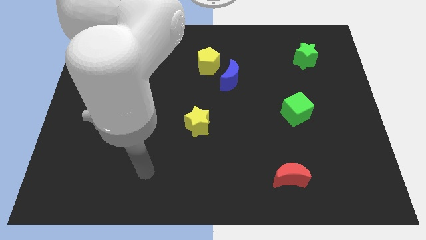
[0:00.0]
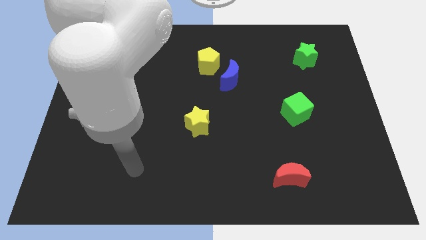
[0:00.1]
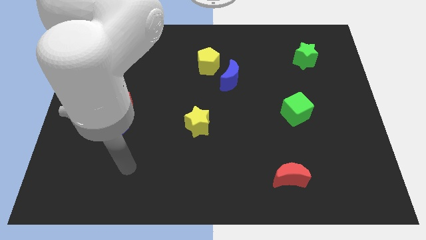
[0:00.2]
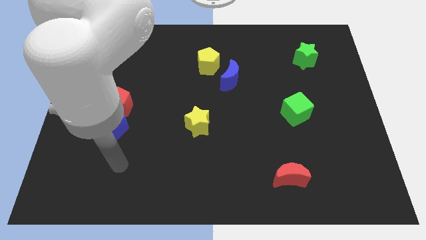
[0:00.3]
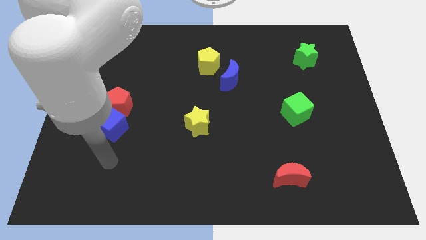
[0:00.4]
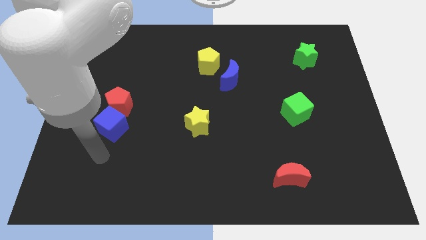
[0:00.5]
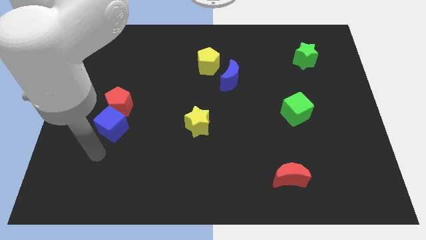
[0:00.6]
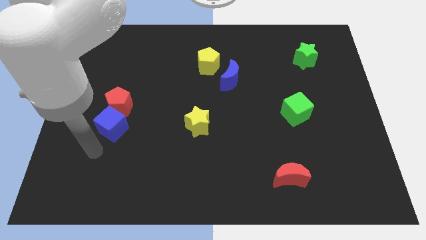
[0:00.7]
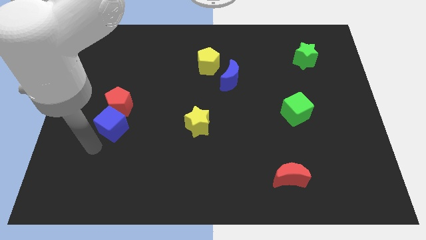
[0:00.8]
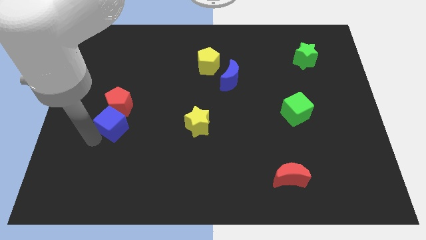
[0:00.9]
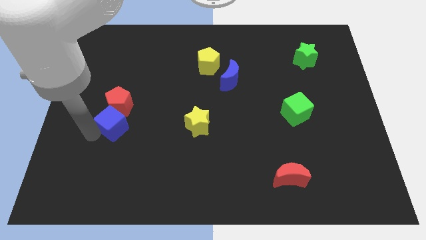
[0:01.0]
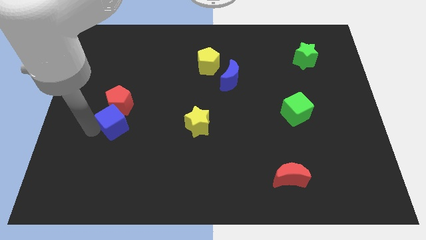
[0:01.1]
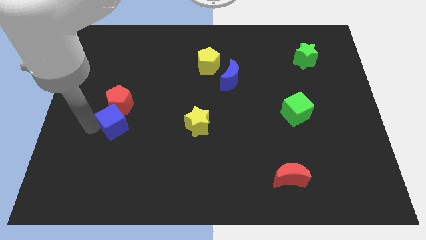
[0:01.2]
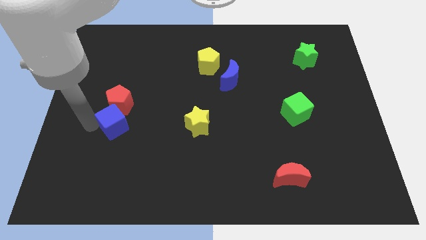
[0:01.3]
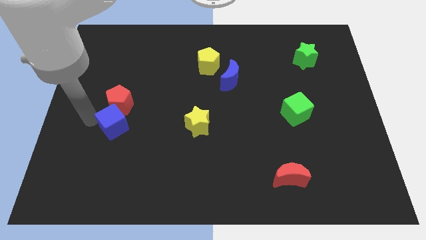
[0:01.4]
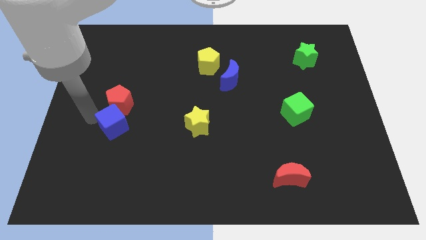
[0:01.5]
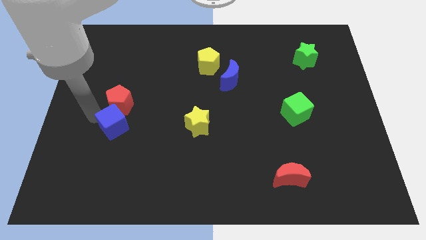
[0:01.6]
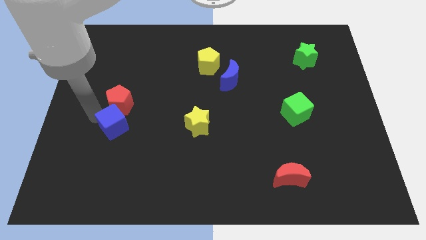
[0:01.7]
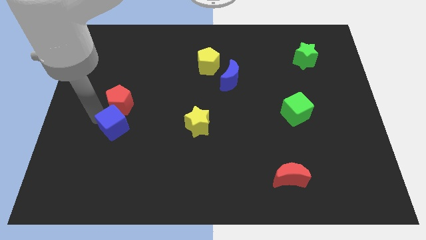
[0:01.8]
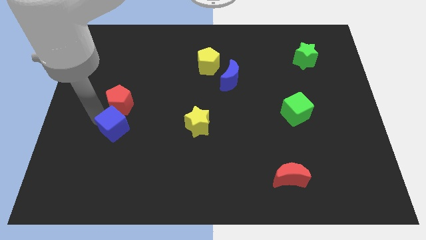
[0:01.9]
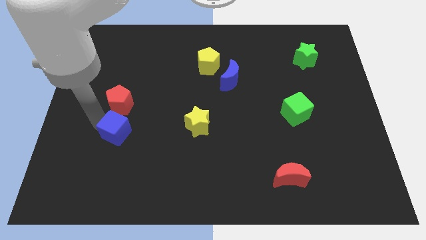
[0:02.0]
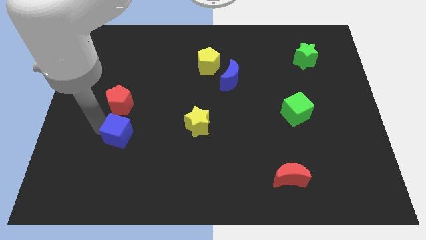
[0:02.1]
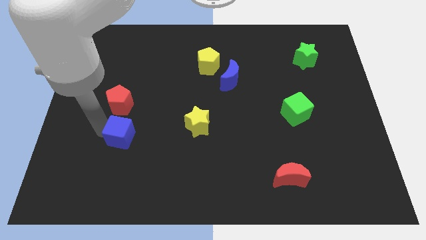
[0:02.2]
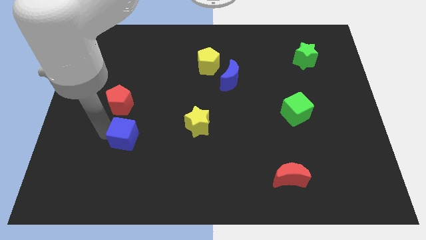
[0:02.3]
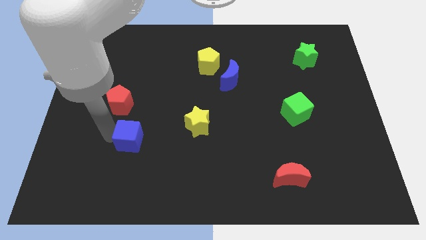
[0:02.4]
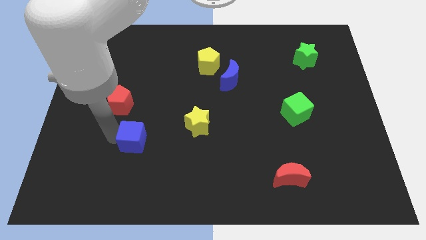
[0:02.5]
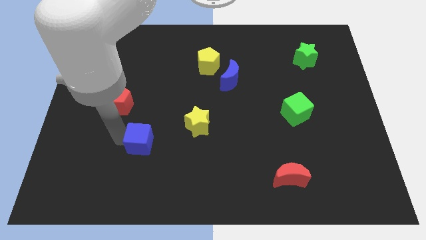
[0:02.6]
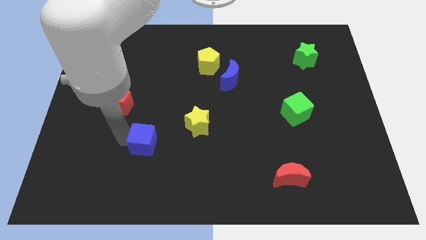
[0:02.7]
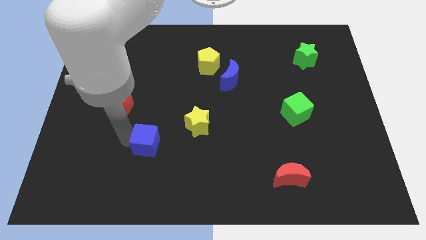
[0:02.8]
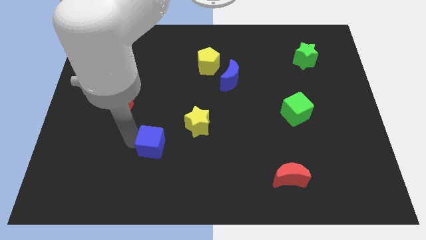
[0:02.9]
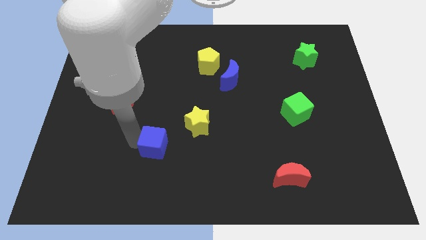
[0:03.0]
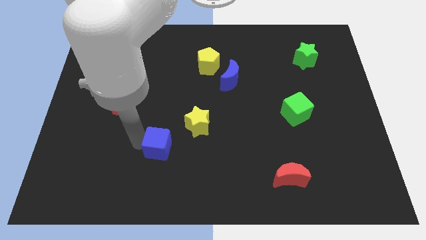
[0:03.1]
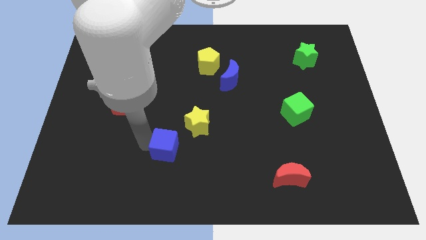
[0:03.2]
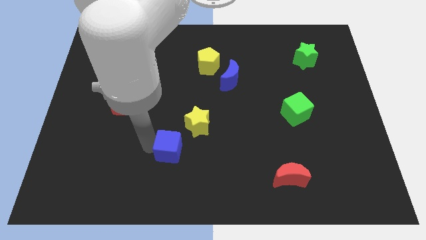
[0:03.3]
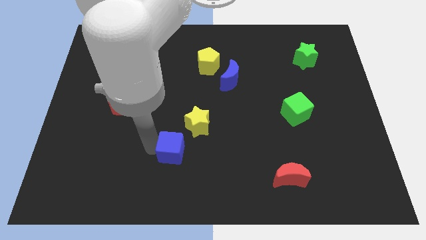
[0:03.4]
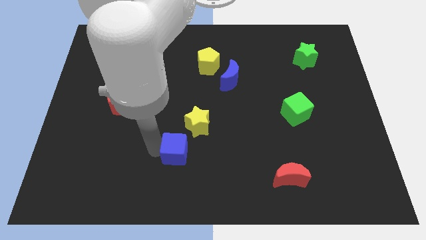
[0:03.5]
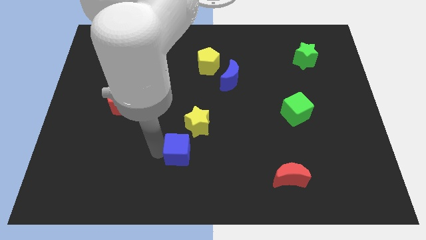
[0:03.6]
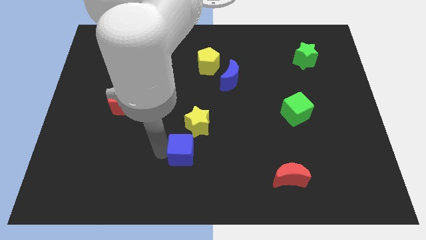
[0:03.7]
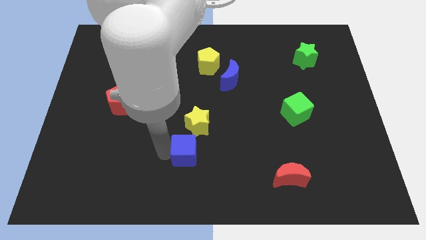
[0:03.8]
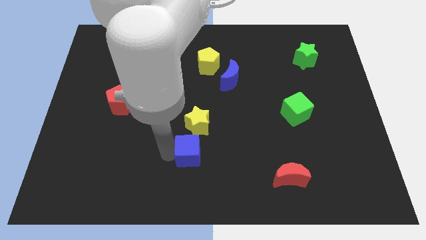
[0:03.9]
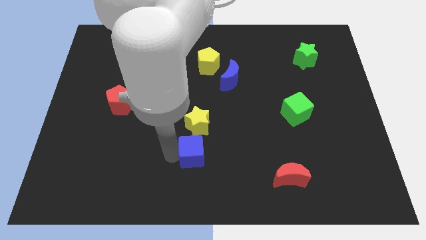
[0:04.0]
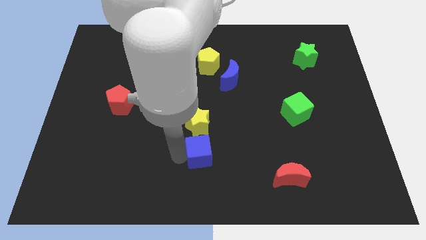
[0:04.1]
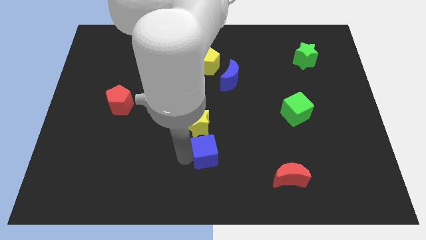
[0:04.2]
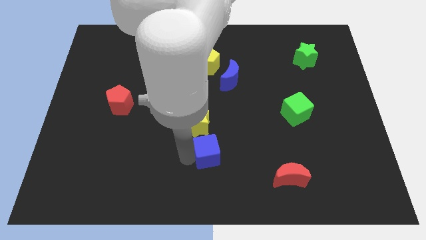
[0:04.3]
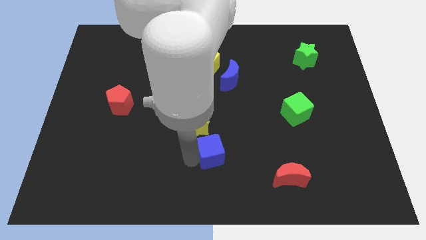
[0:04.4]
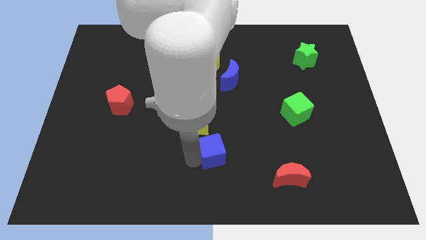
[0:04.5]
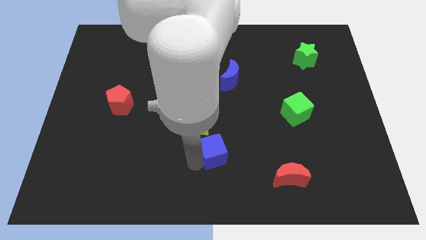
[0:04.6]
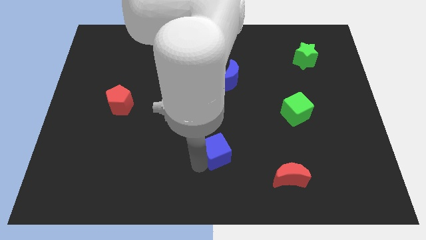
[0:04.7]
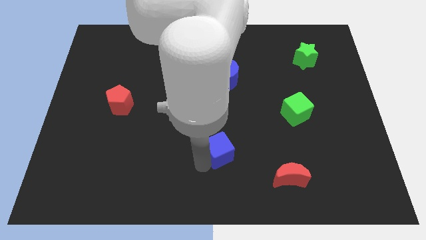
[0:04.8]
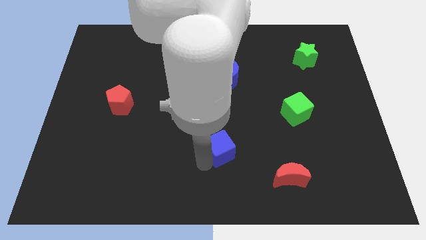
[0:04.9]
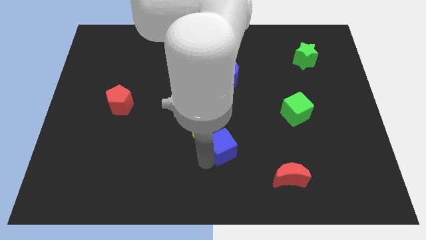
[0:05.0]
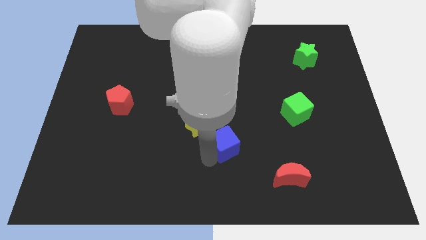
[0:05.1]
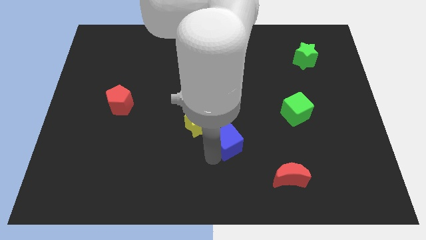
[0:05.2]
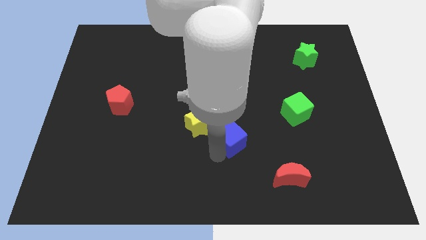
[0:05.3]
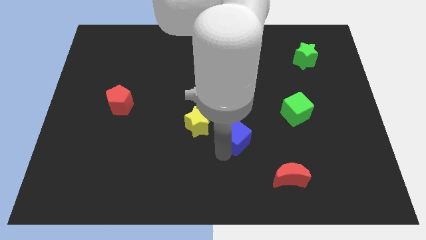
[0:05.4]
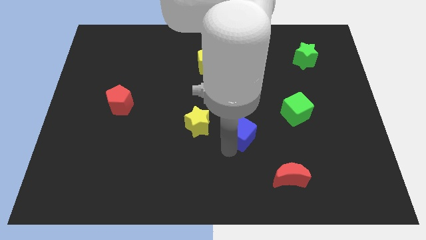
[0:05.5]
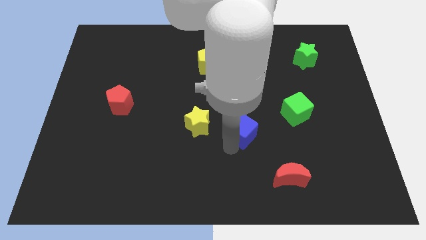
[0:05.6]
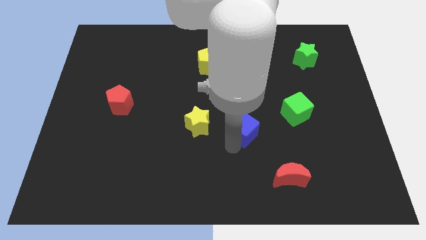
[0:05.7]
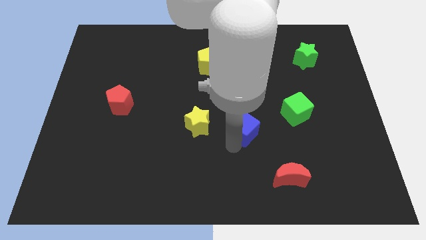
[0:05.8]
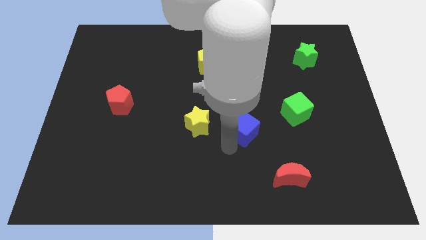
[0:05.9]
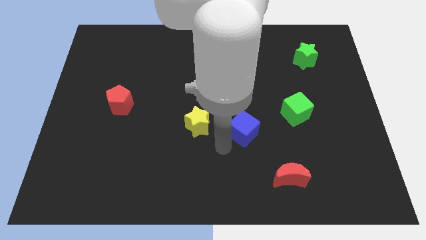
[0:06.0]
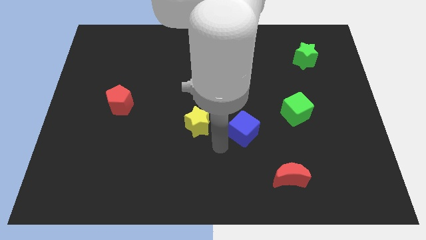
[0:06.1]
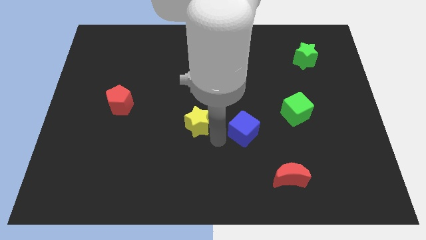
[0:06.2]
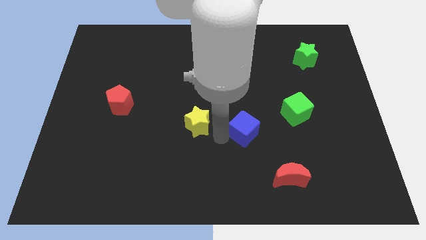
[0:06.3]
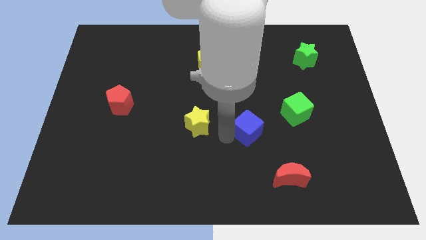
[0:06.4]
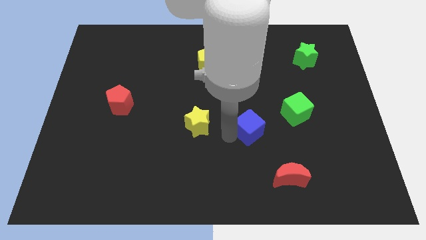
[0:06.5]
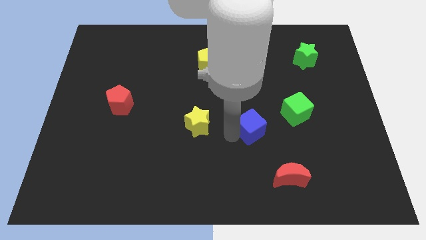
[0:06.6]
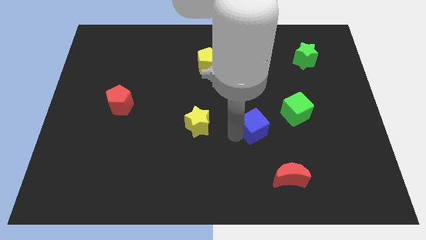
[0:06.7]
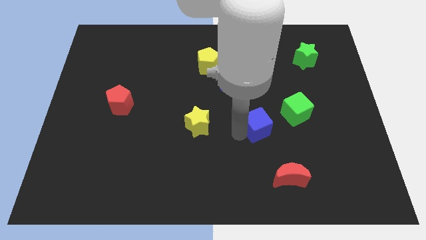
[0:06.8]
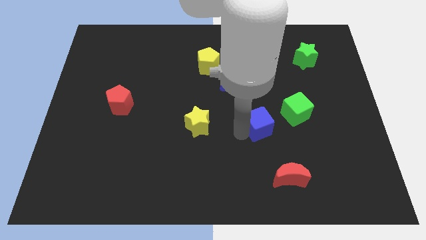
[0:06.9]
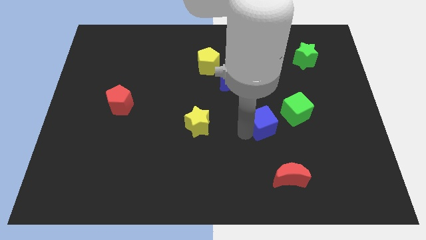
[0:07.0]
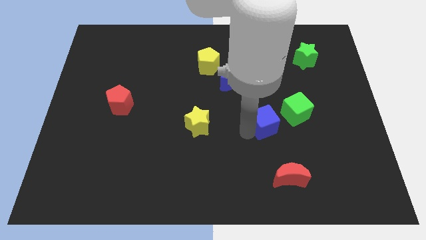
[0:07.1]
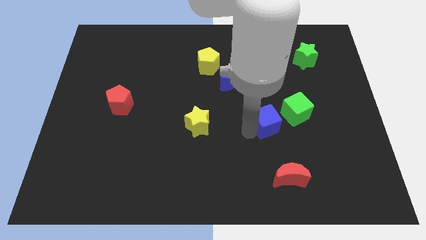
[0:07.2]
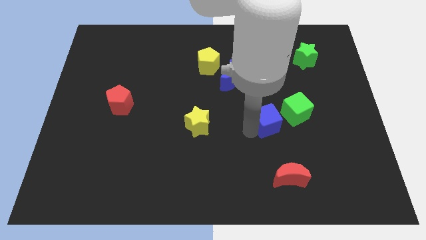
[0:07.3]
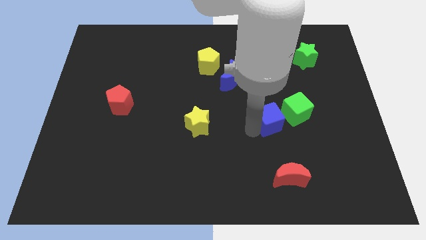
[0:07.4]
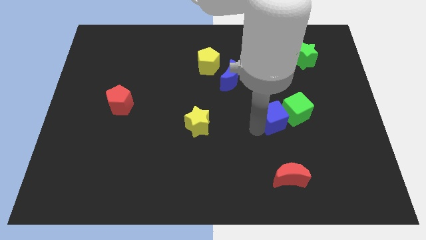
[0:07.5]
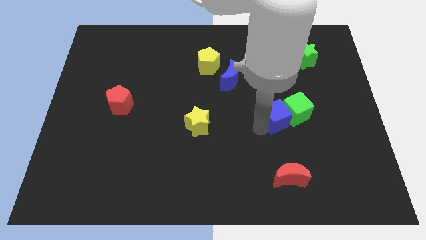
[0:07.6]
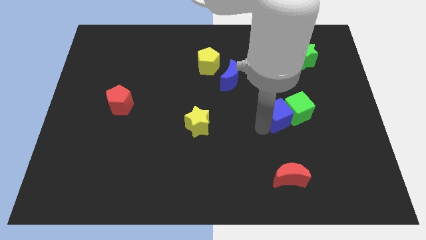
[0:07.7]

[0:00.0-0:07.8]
push the blue cube next to the green cube
